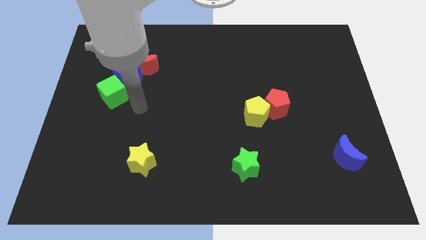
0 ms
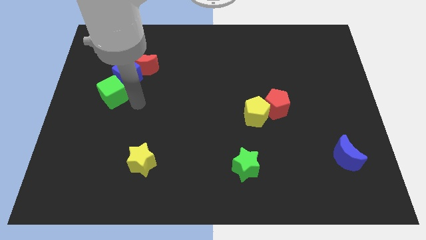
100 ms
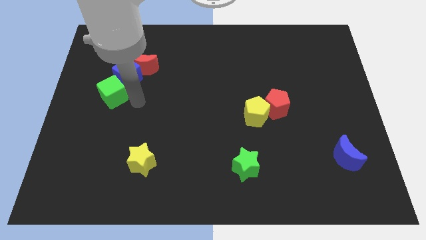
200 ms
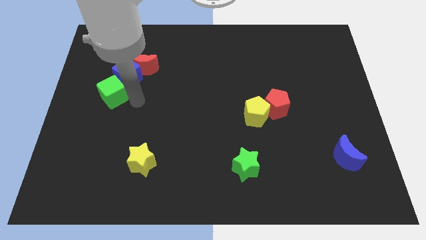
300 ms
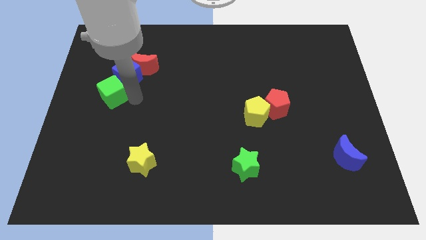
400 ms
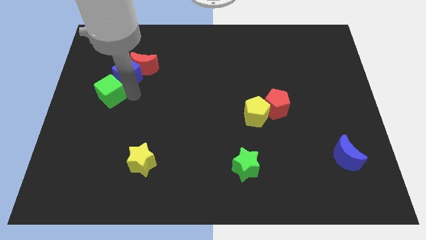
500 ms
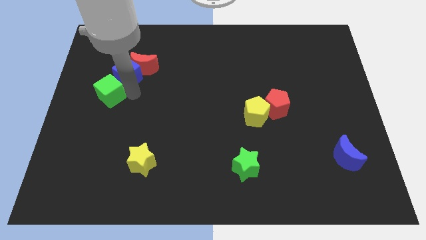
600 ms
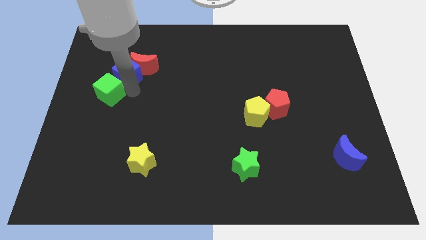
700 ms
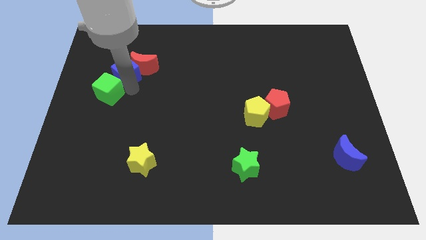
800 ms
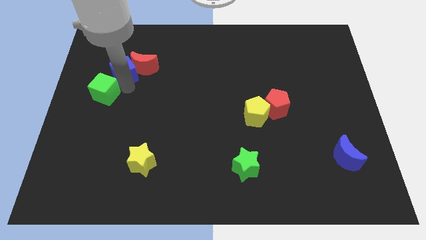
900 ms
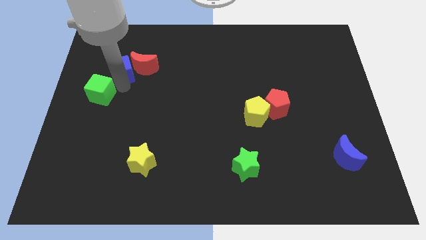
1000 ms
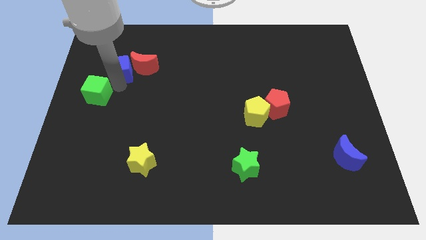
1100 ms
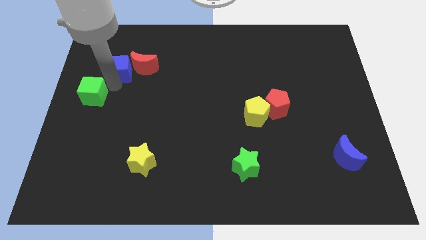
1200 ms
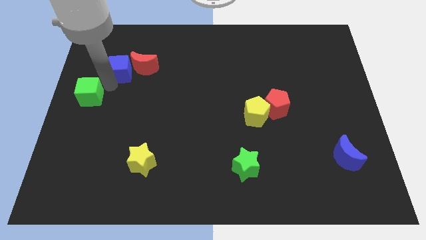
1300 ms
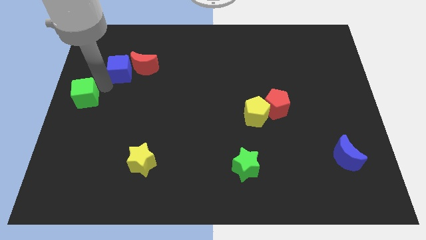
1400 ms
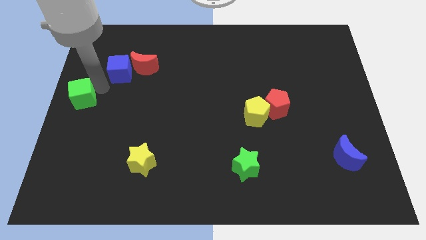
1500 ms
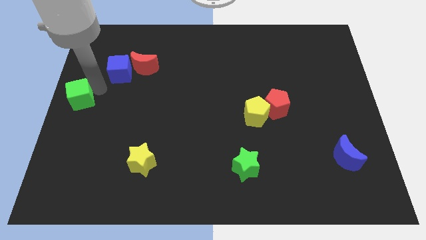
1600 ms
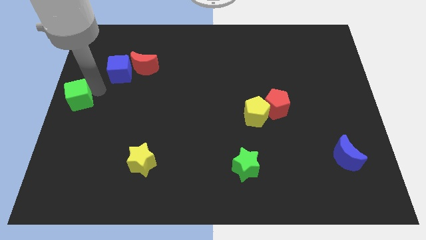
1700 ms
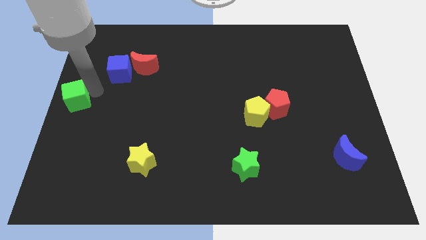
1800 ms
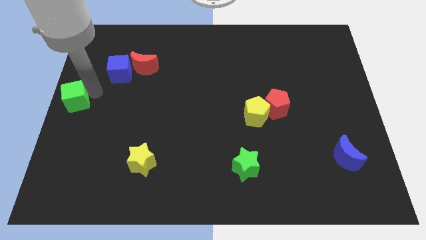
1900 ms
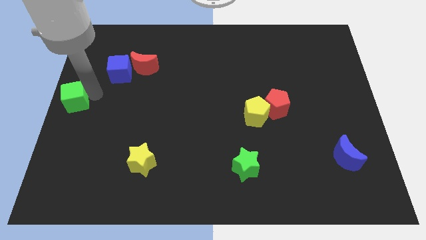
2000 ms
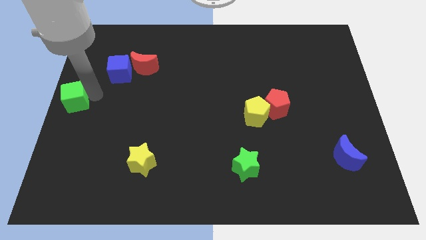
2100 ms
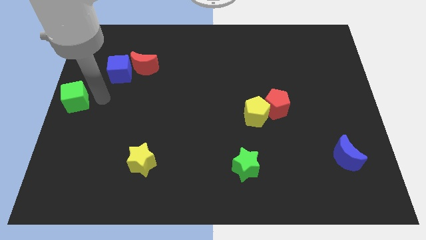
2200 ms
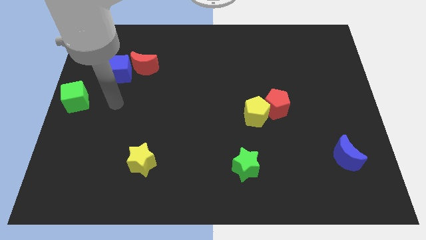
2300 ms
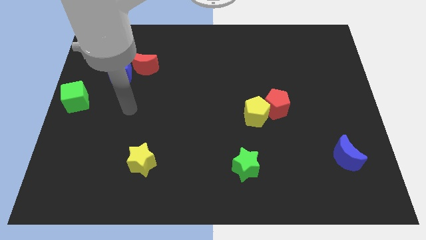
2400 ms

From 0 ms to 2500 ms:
separate the green cube towards left side

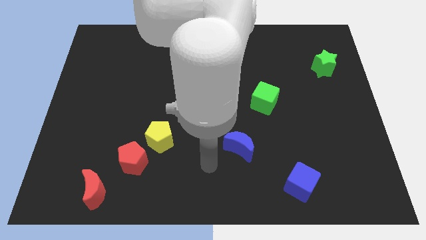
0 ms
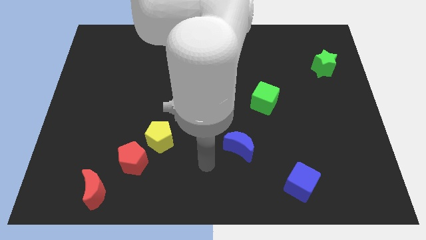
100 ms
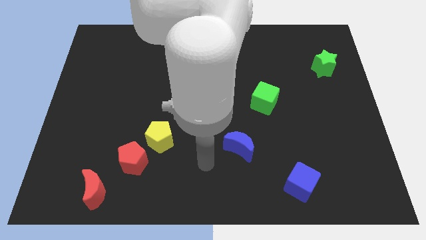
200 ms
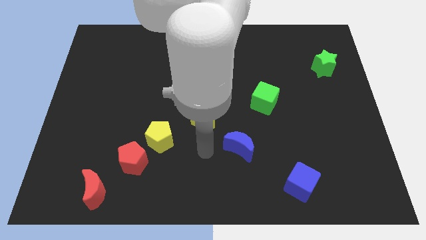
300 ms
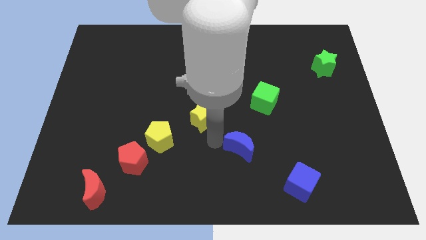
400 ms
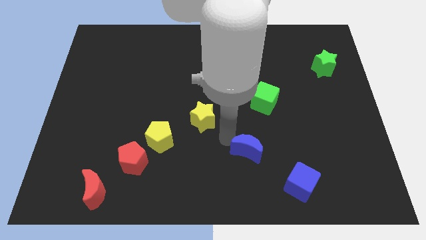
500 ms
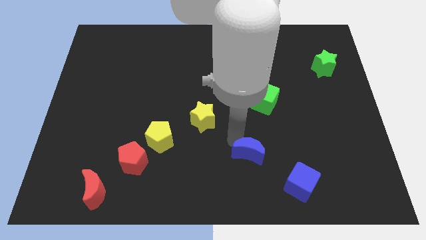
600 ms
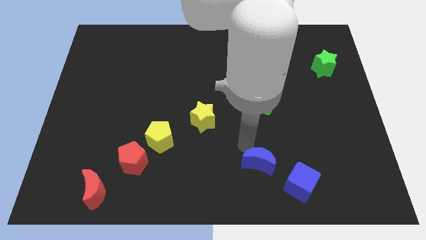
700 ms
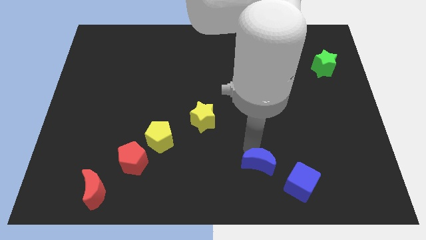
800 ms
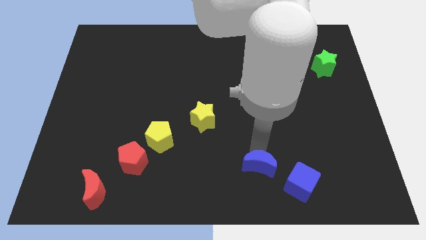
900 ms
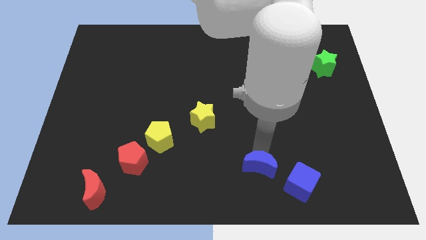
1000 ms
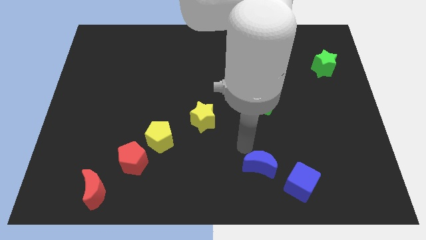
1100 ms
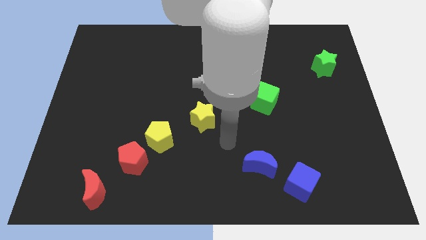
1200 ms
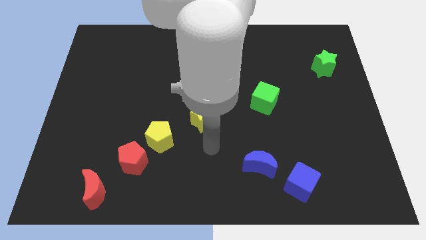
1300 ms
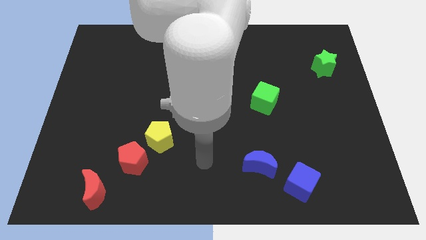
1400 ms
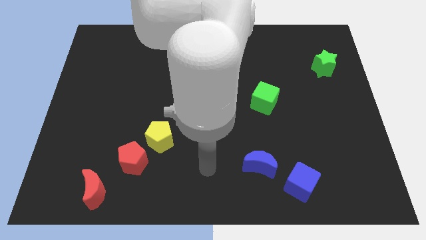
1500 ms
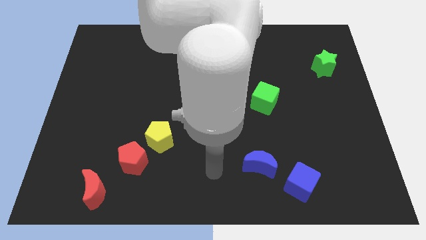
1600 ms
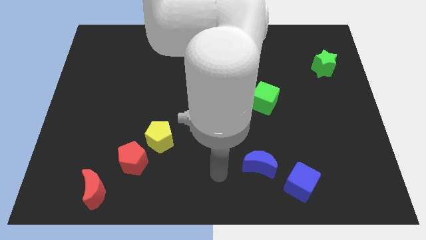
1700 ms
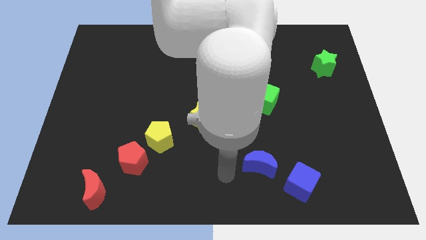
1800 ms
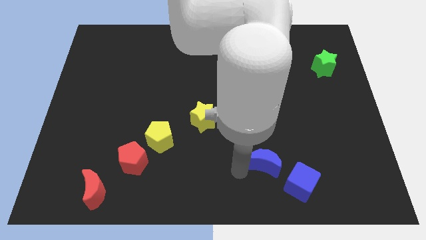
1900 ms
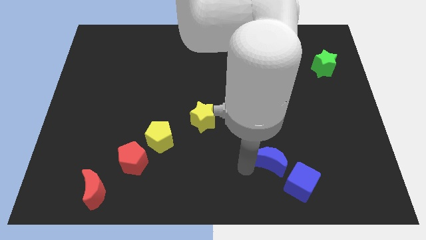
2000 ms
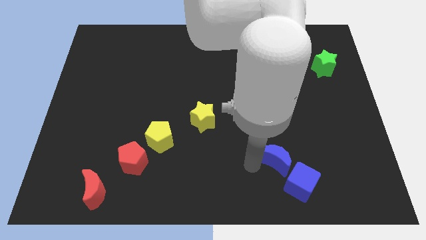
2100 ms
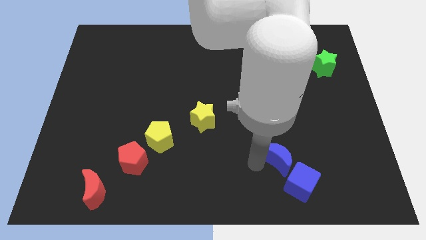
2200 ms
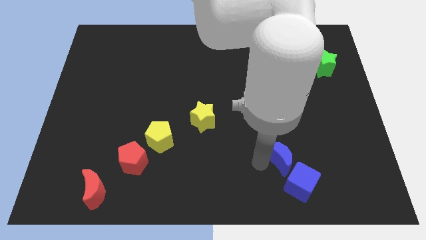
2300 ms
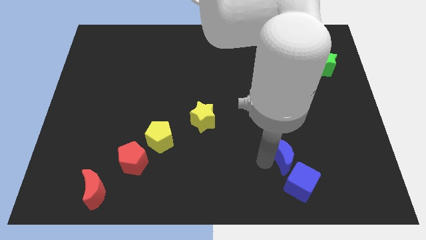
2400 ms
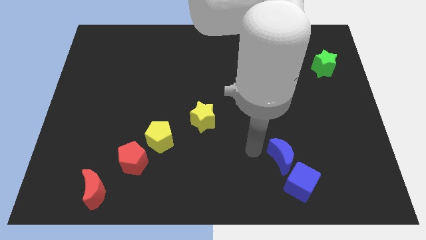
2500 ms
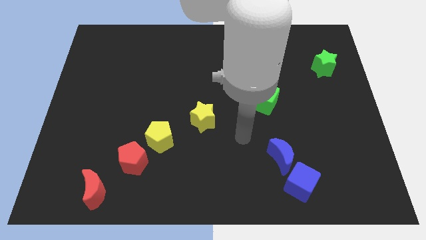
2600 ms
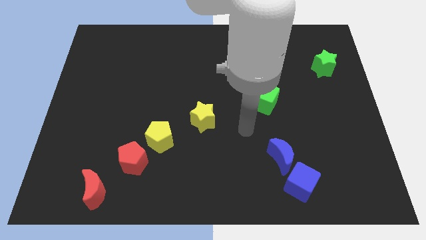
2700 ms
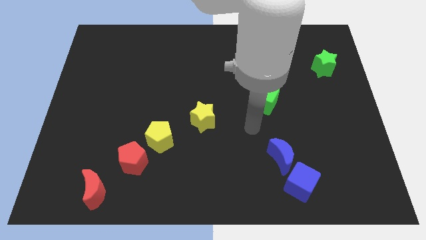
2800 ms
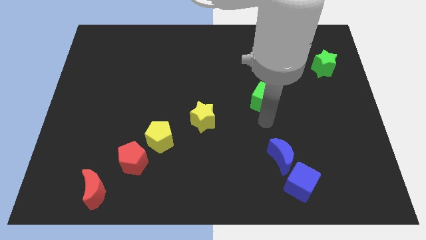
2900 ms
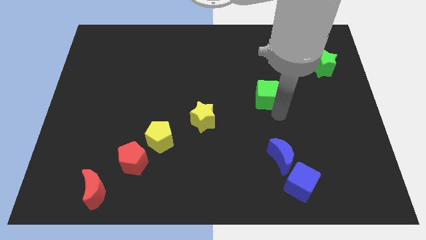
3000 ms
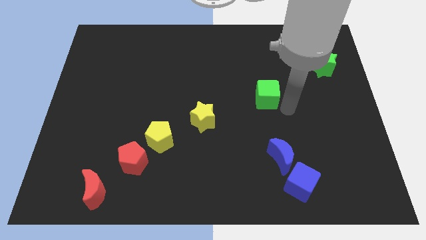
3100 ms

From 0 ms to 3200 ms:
push the blue moon towards the blue cube

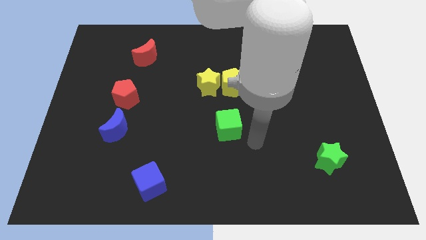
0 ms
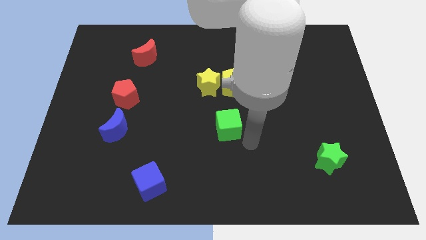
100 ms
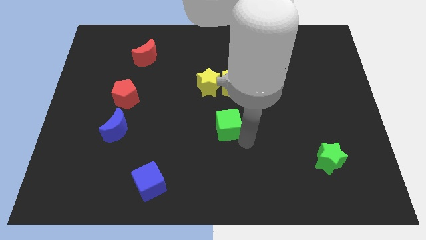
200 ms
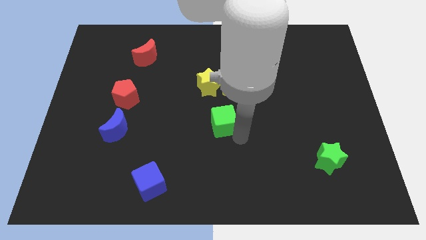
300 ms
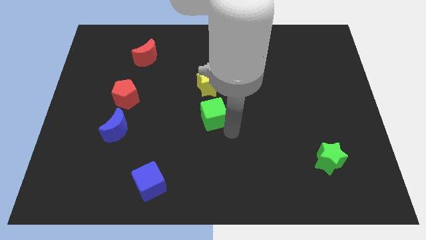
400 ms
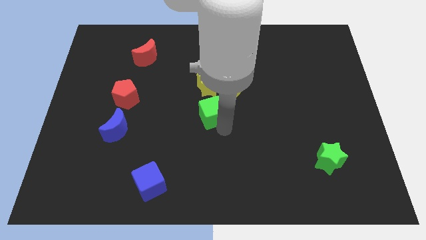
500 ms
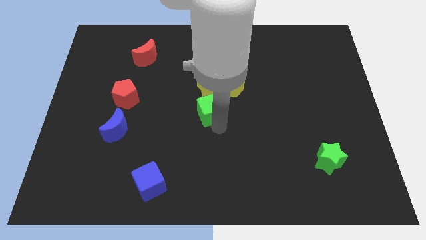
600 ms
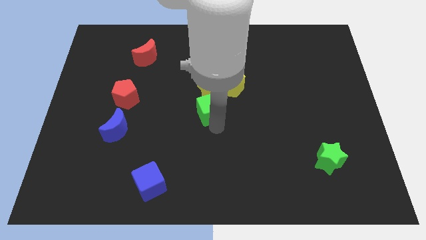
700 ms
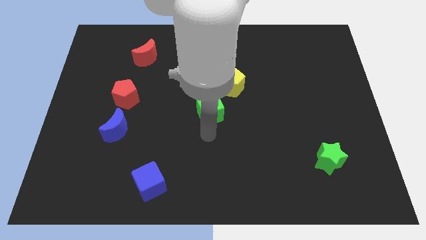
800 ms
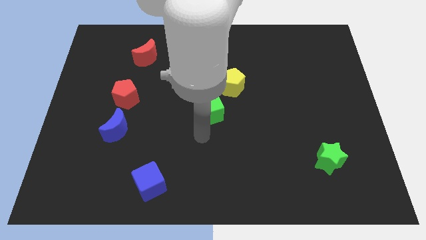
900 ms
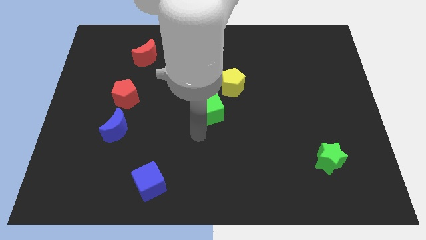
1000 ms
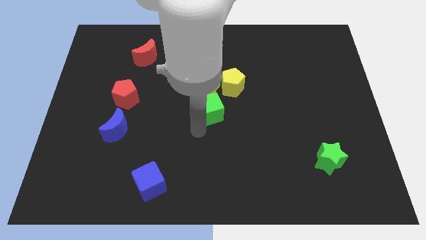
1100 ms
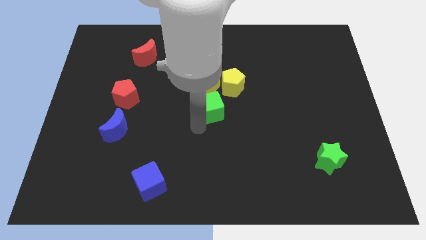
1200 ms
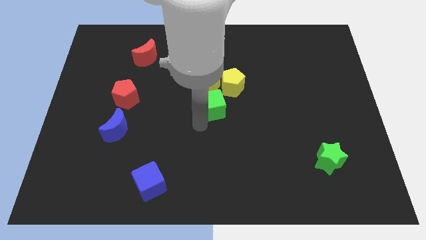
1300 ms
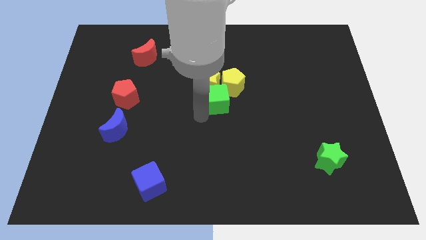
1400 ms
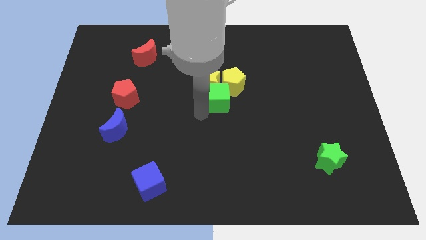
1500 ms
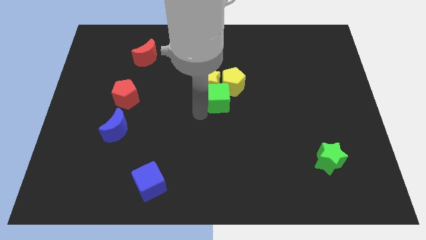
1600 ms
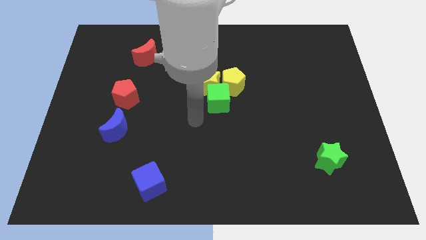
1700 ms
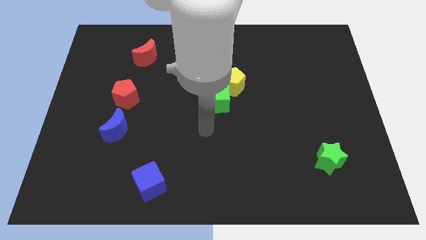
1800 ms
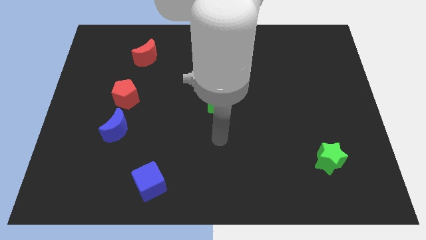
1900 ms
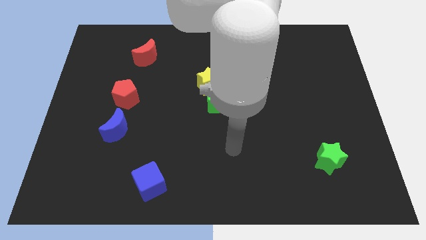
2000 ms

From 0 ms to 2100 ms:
move the green cube to the center of the board

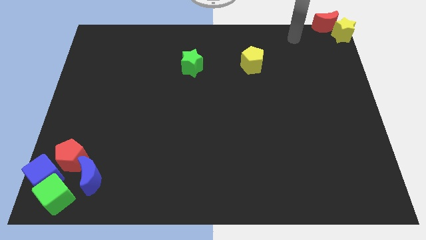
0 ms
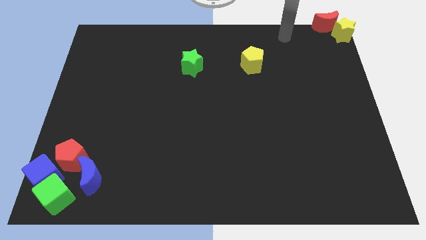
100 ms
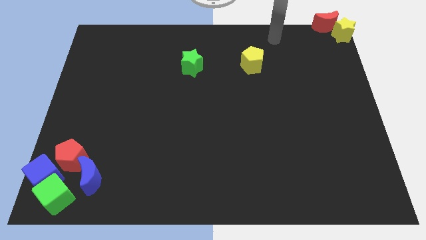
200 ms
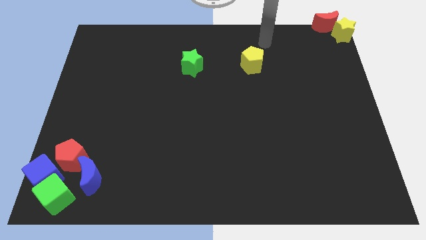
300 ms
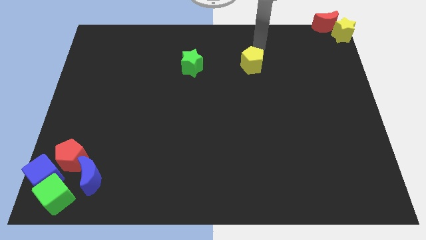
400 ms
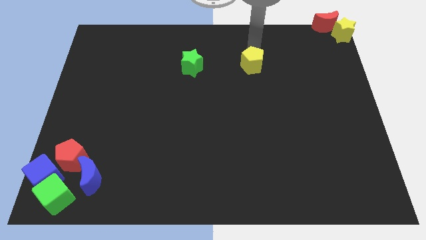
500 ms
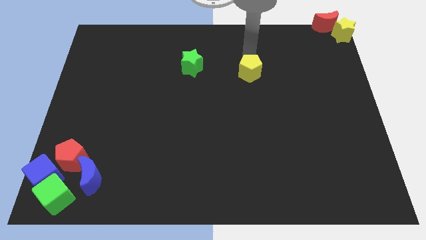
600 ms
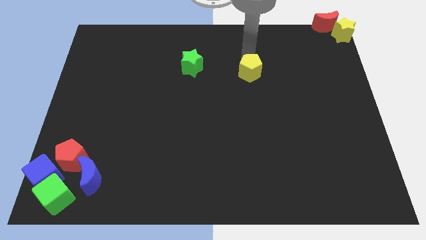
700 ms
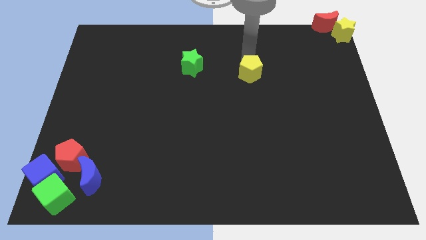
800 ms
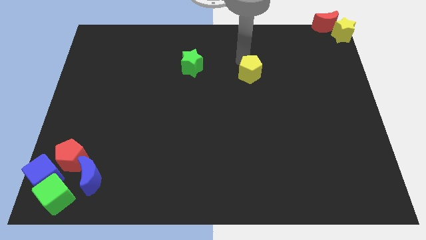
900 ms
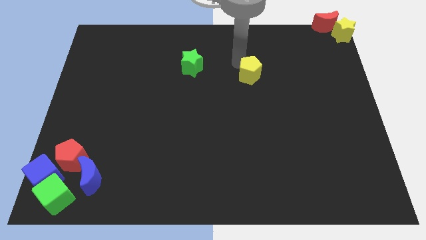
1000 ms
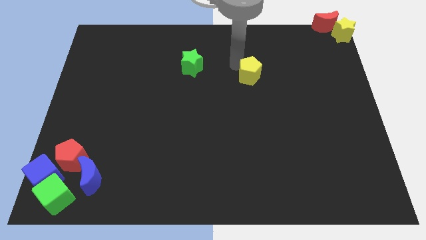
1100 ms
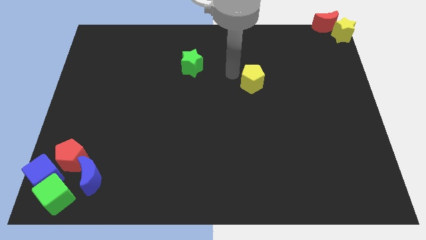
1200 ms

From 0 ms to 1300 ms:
move the yellow pentagon slightly to the bottom

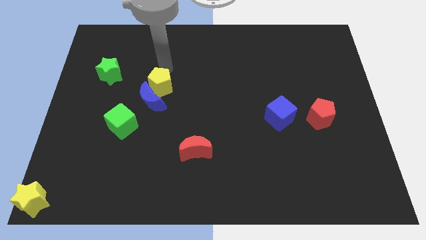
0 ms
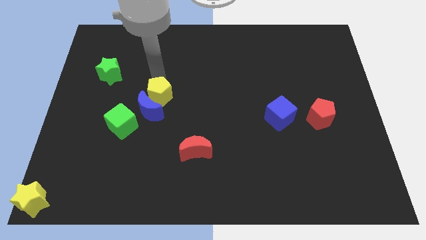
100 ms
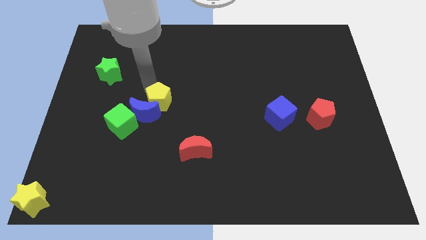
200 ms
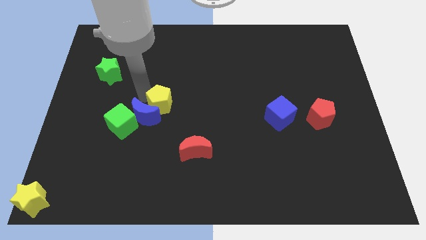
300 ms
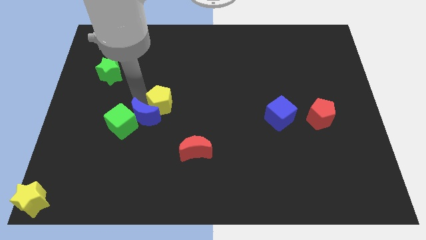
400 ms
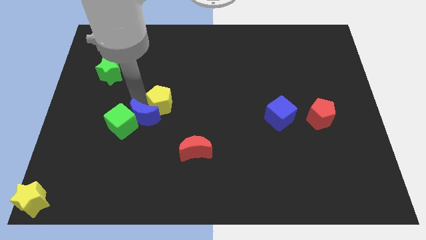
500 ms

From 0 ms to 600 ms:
move yellow pentagon slightly down
